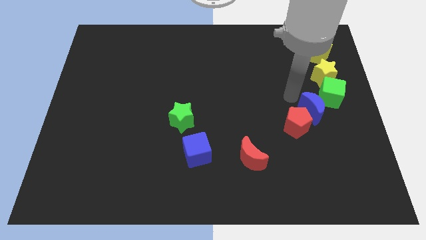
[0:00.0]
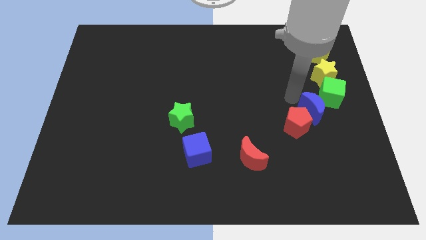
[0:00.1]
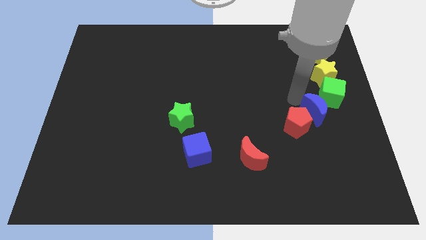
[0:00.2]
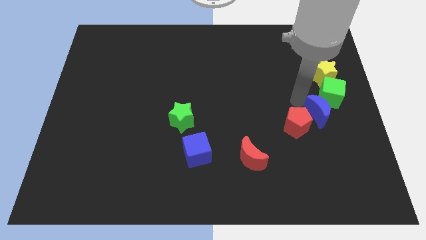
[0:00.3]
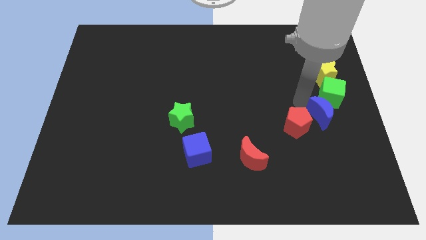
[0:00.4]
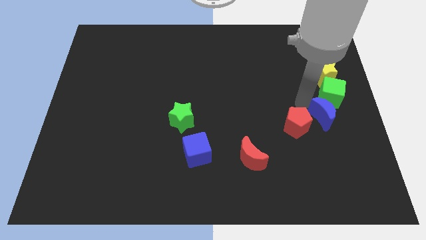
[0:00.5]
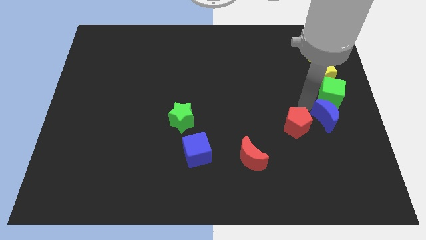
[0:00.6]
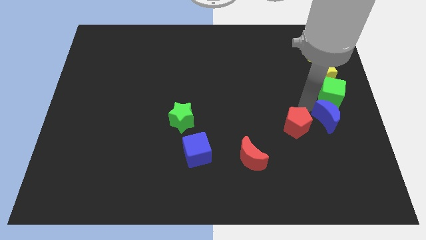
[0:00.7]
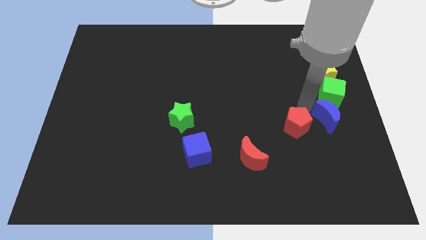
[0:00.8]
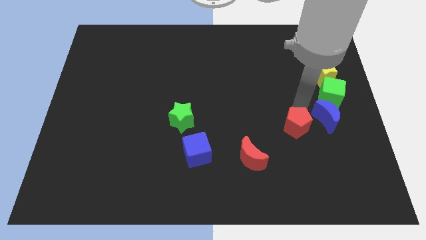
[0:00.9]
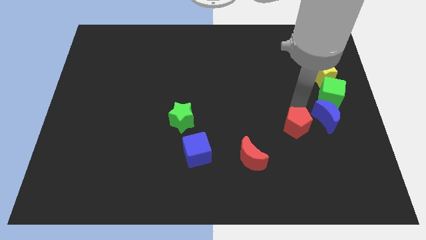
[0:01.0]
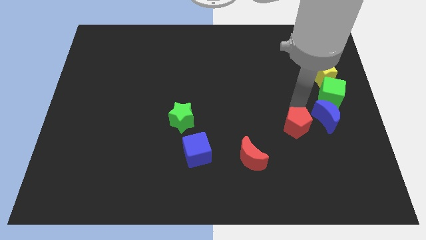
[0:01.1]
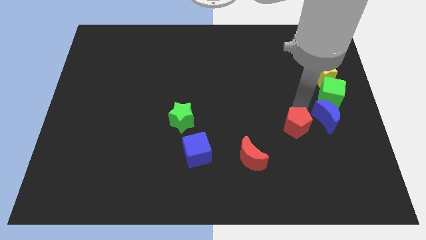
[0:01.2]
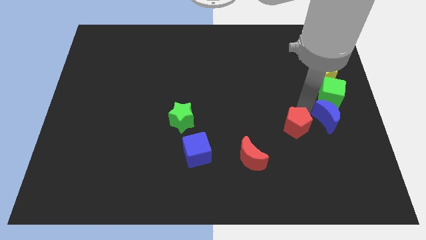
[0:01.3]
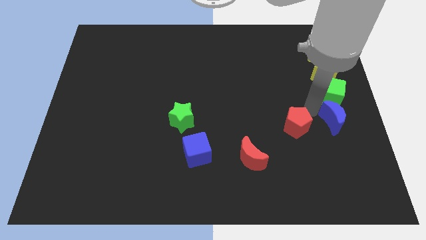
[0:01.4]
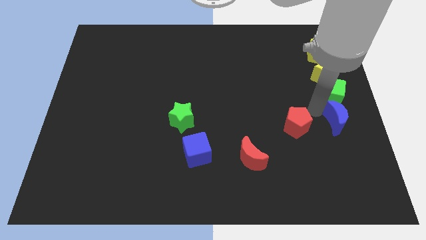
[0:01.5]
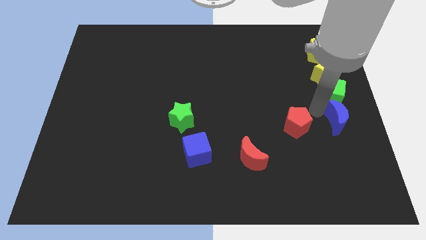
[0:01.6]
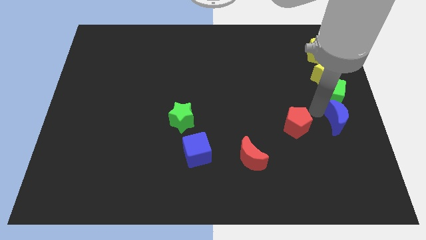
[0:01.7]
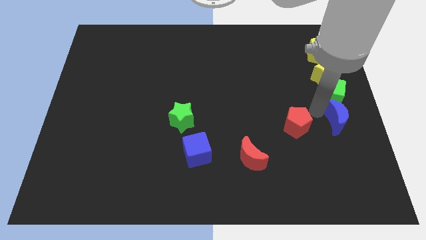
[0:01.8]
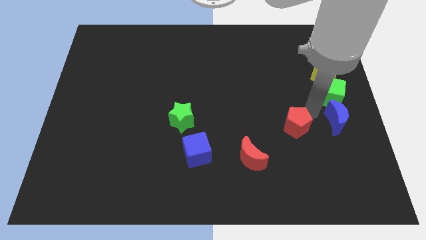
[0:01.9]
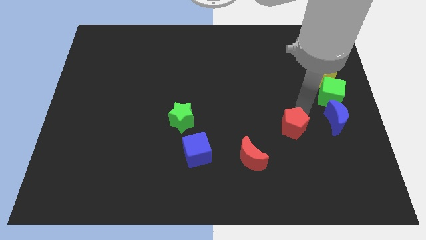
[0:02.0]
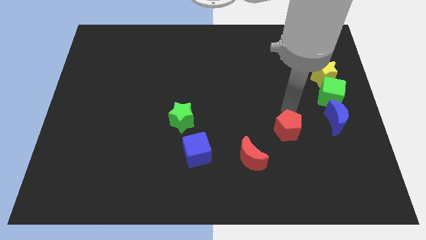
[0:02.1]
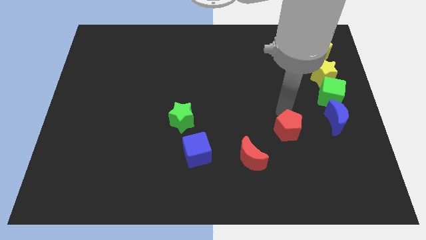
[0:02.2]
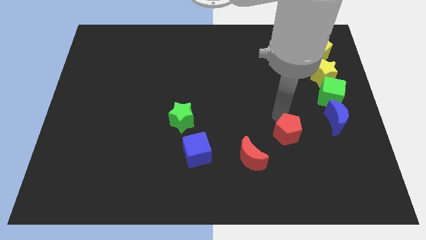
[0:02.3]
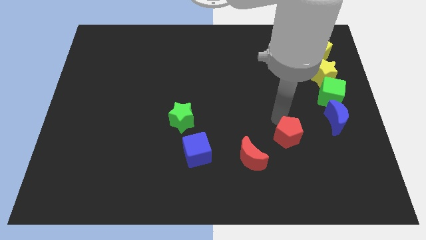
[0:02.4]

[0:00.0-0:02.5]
separate the blue moon from the red pentagon

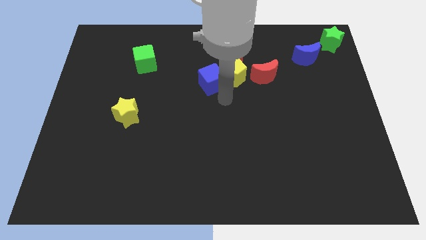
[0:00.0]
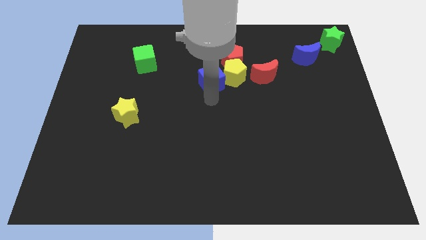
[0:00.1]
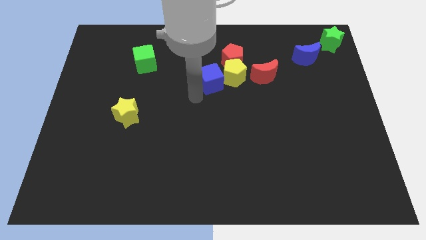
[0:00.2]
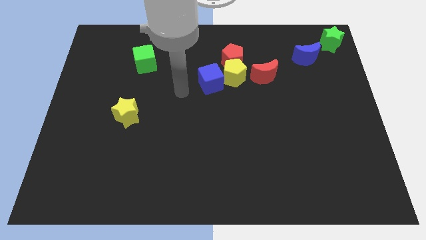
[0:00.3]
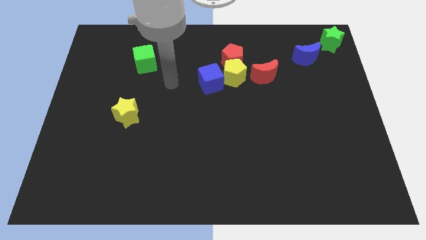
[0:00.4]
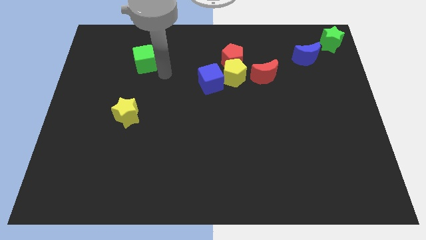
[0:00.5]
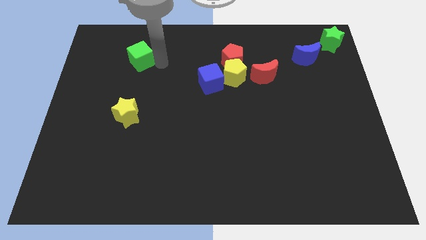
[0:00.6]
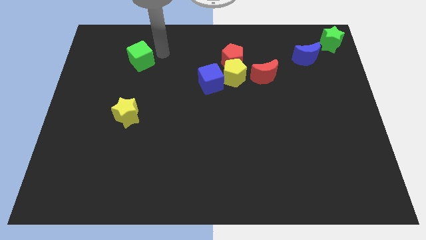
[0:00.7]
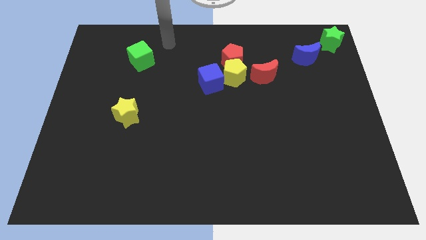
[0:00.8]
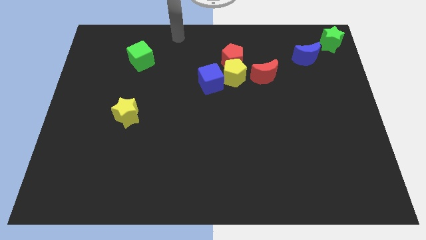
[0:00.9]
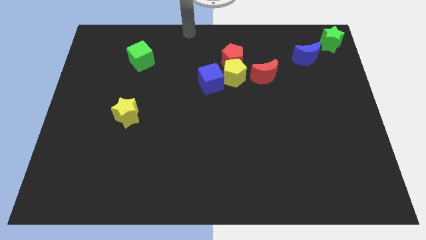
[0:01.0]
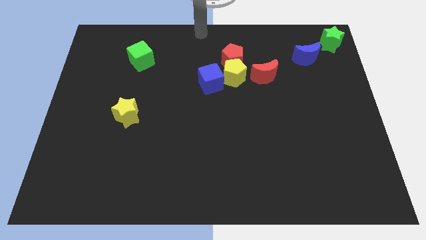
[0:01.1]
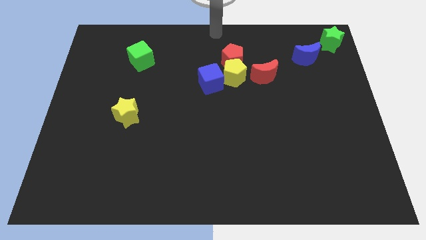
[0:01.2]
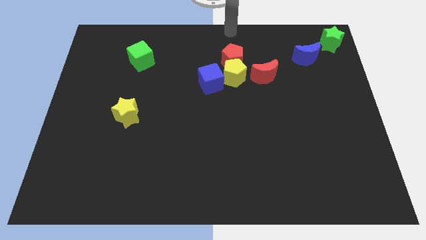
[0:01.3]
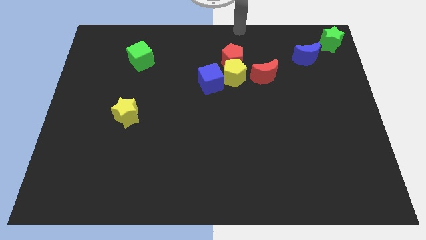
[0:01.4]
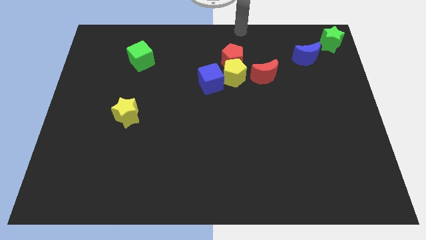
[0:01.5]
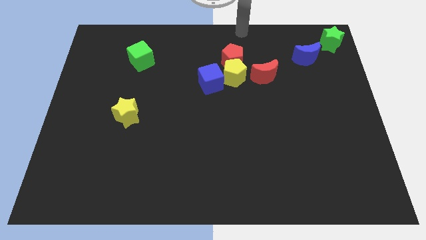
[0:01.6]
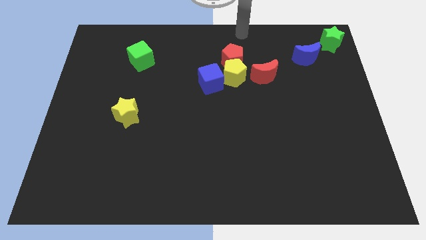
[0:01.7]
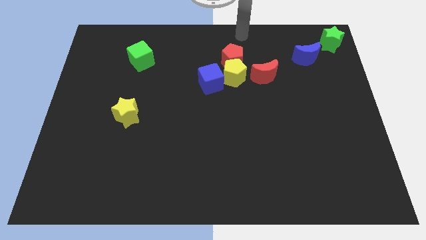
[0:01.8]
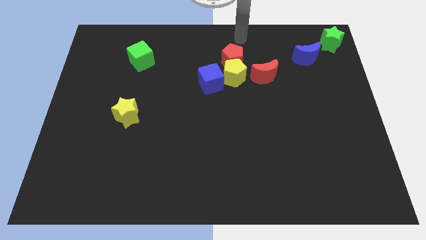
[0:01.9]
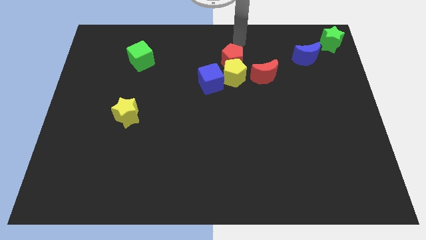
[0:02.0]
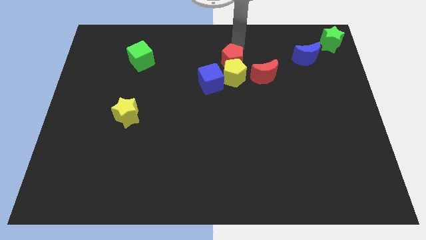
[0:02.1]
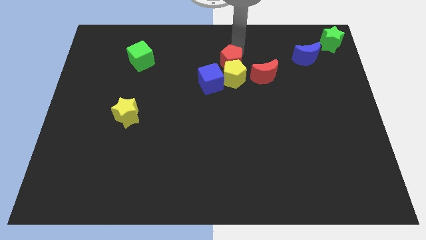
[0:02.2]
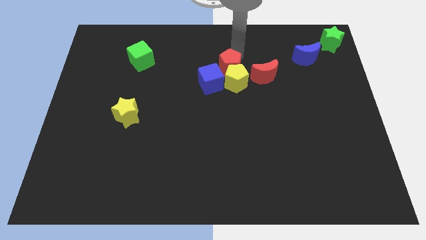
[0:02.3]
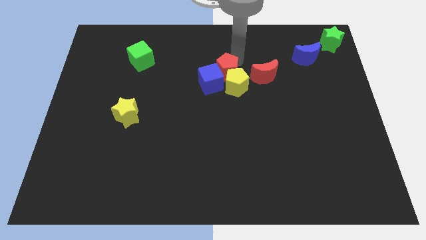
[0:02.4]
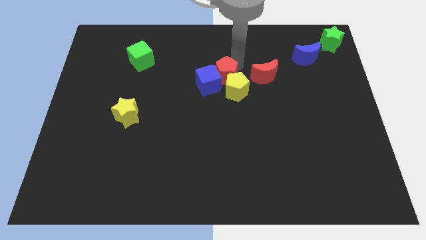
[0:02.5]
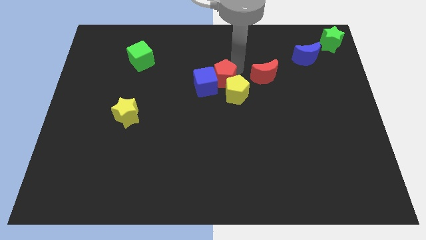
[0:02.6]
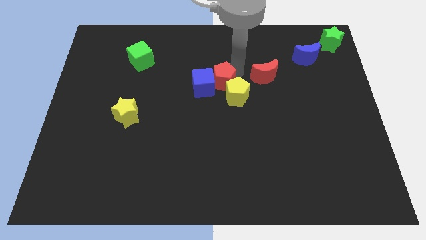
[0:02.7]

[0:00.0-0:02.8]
push the red pentagon into the yellow pentagon

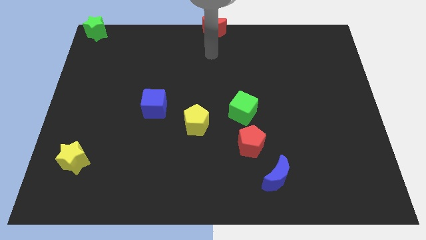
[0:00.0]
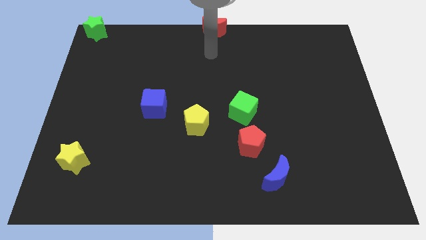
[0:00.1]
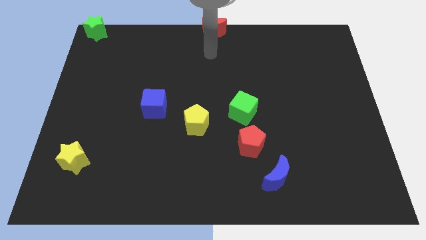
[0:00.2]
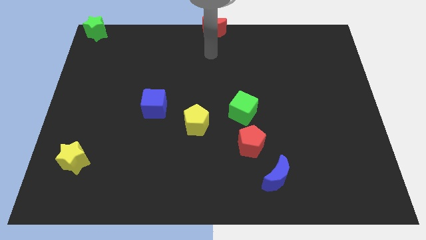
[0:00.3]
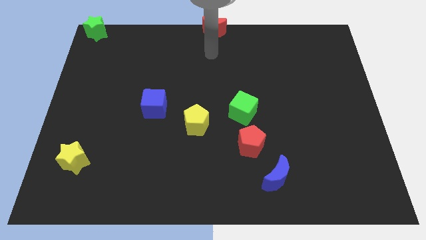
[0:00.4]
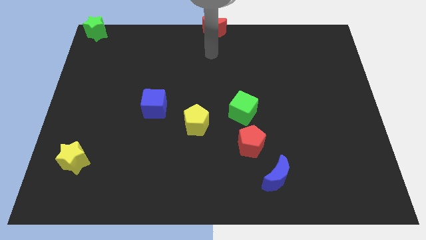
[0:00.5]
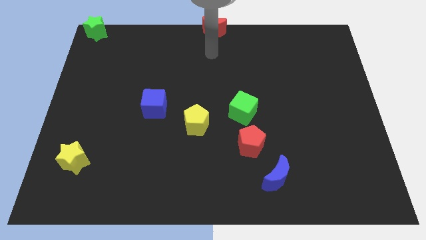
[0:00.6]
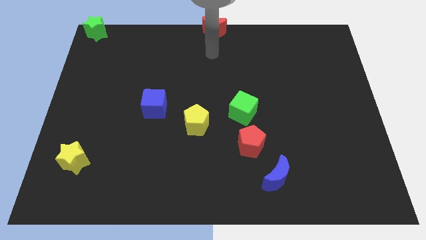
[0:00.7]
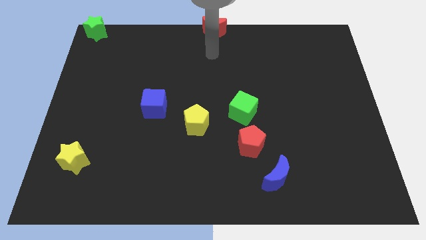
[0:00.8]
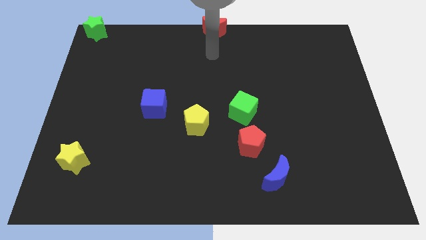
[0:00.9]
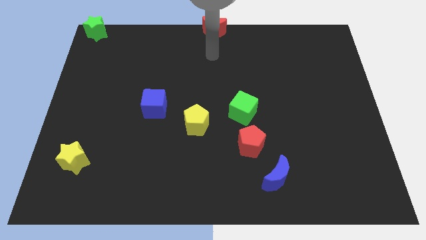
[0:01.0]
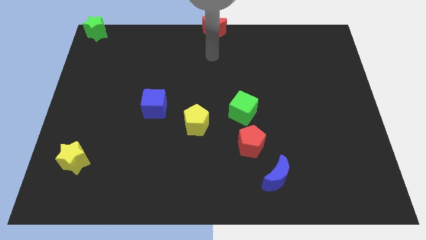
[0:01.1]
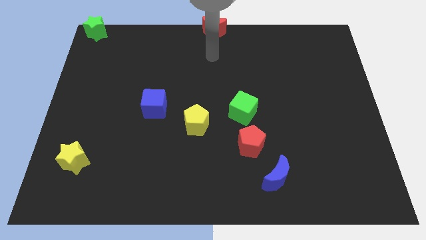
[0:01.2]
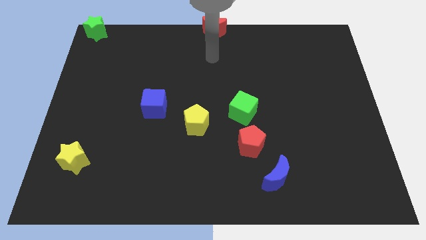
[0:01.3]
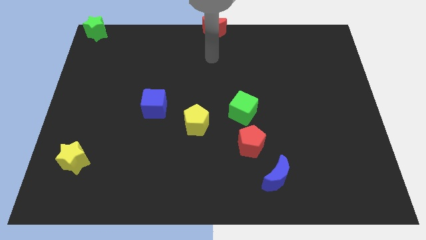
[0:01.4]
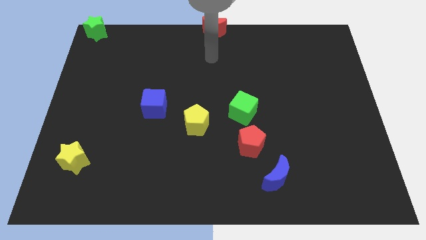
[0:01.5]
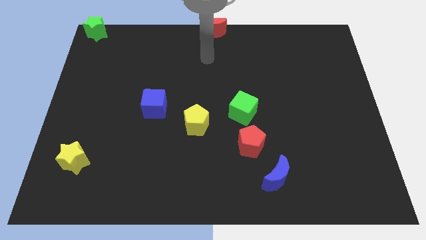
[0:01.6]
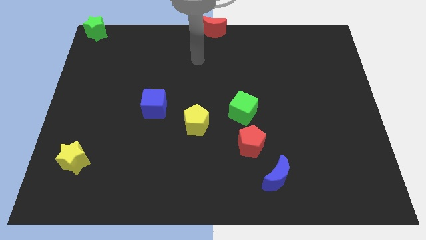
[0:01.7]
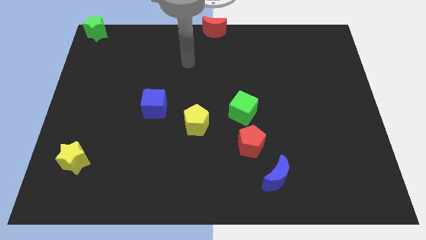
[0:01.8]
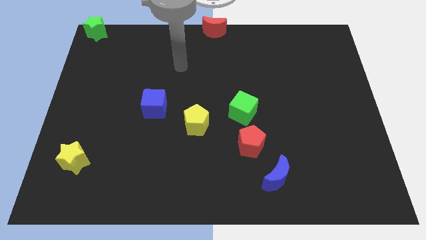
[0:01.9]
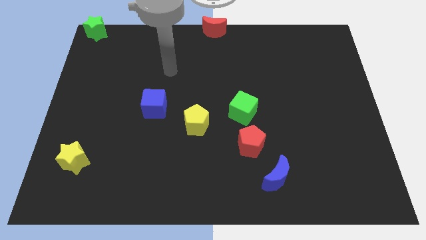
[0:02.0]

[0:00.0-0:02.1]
put your arm away from the red crescent

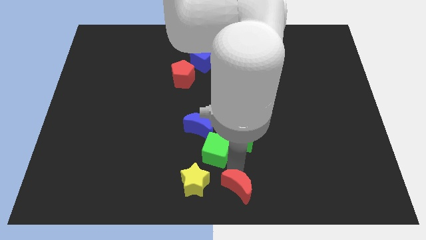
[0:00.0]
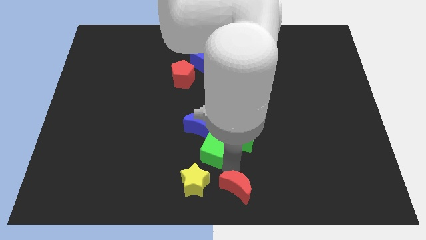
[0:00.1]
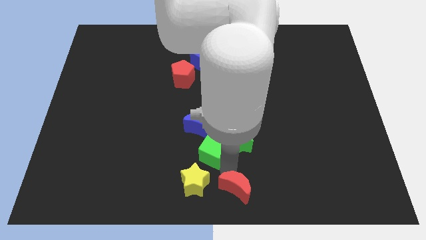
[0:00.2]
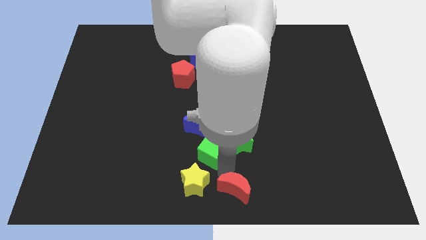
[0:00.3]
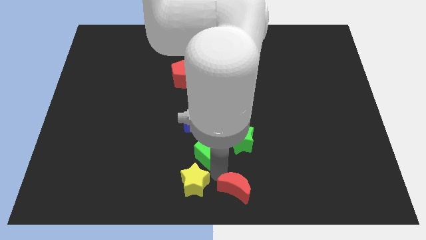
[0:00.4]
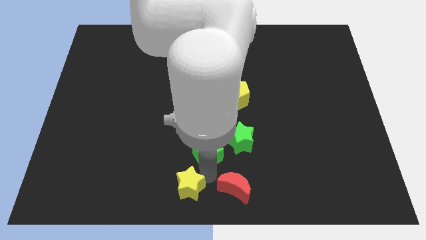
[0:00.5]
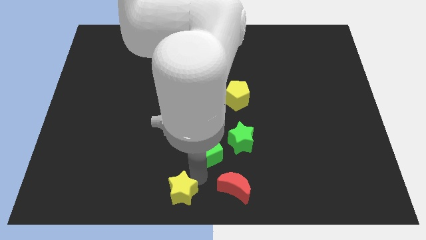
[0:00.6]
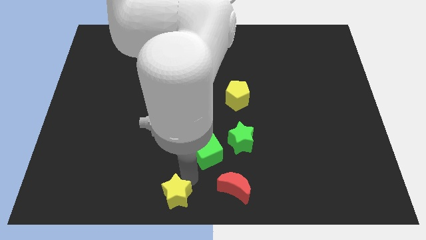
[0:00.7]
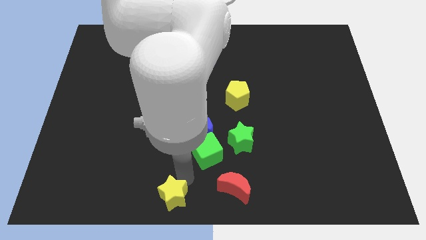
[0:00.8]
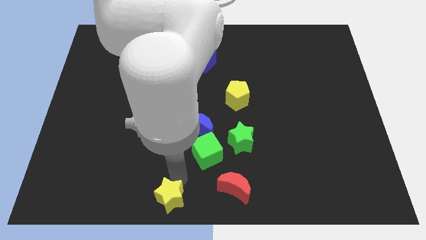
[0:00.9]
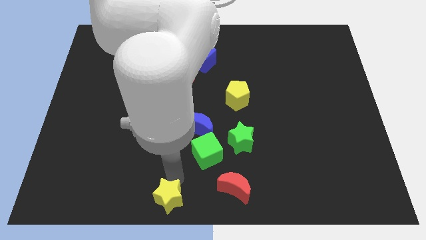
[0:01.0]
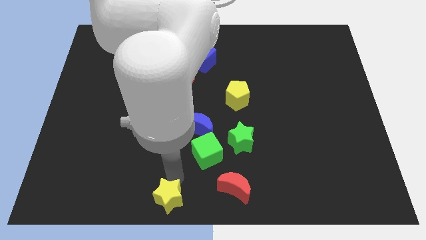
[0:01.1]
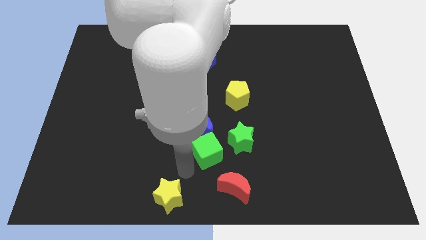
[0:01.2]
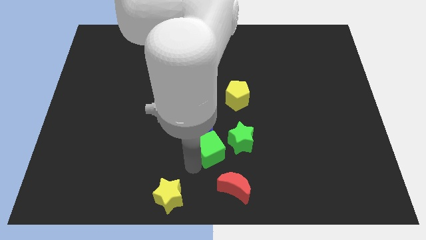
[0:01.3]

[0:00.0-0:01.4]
push the yellow star downward

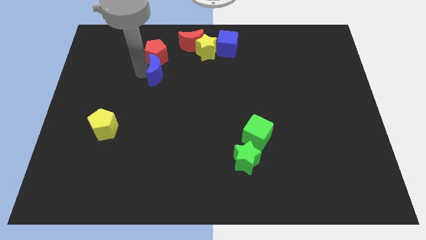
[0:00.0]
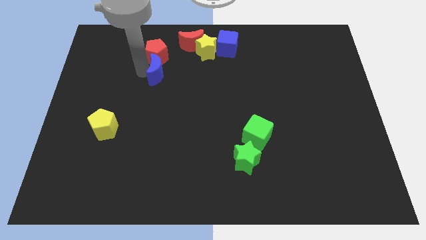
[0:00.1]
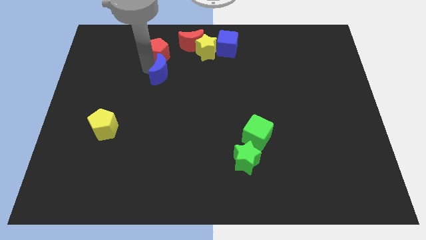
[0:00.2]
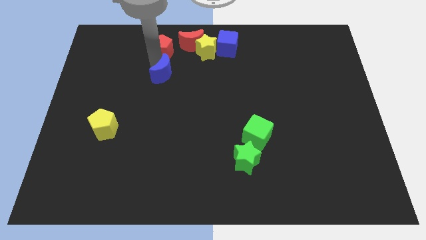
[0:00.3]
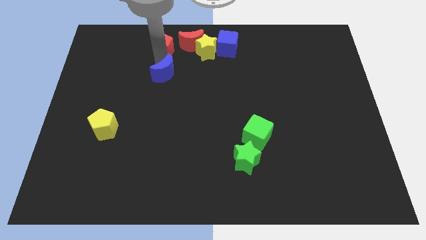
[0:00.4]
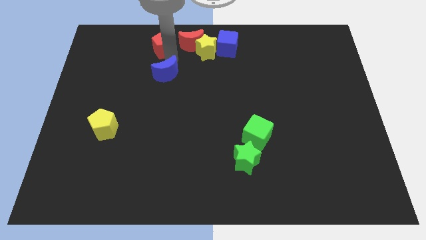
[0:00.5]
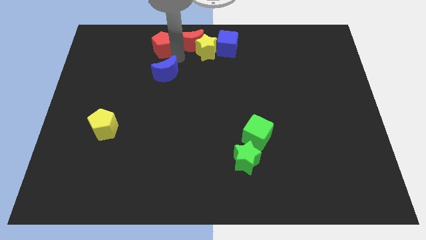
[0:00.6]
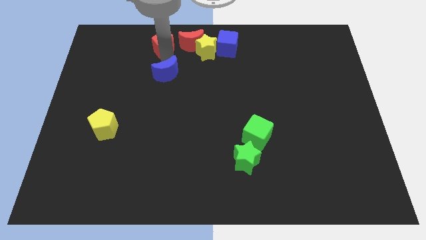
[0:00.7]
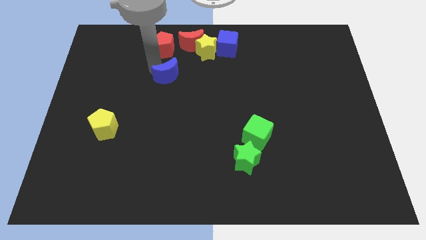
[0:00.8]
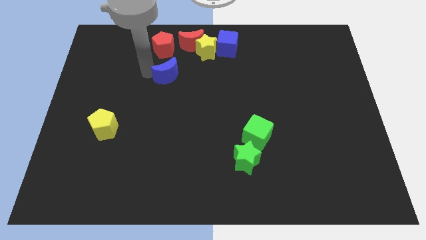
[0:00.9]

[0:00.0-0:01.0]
move the red pentagon to the left of the red crescent
